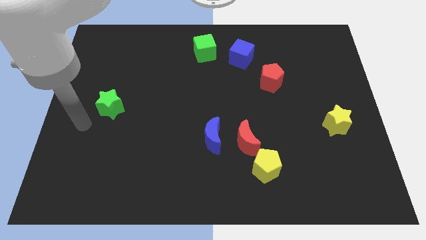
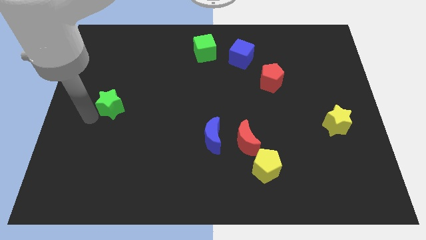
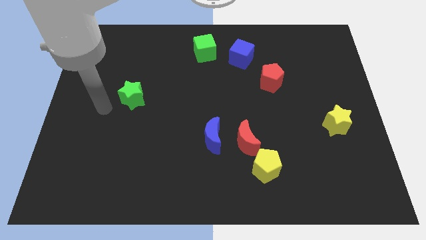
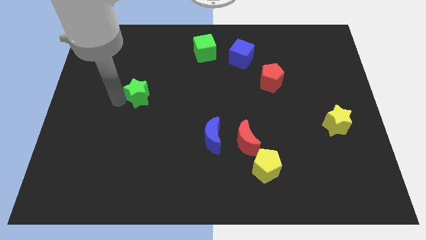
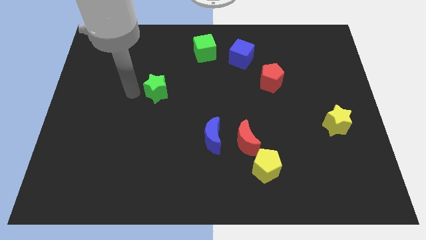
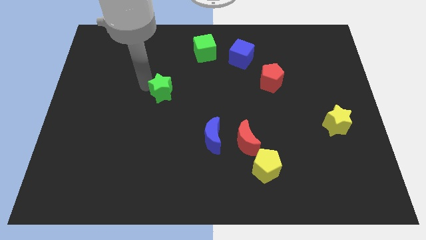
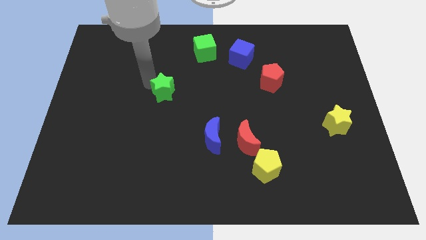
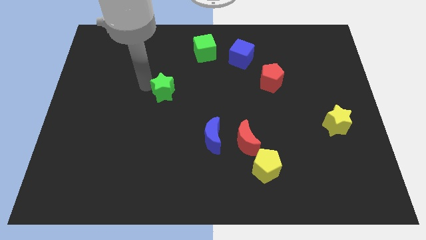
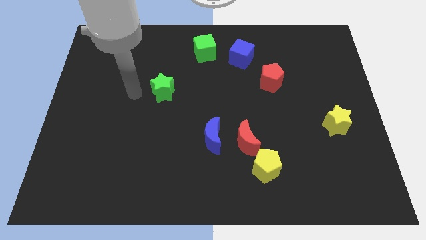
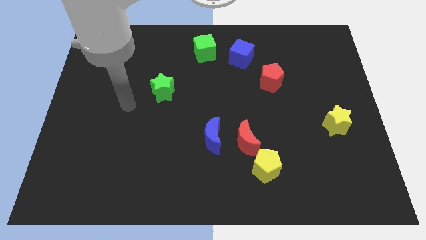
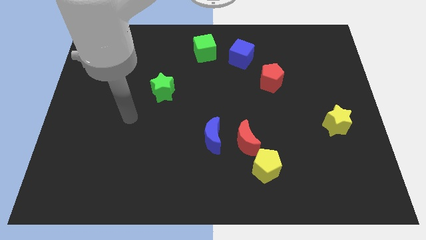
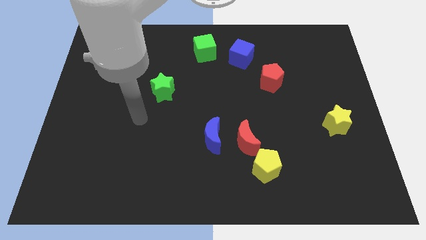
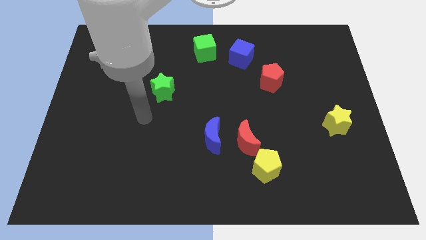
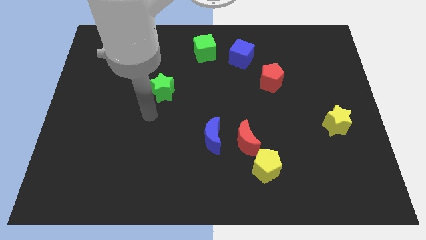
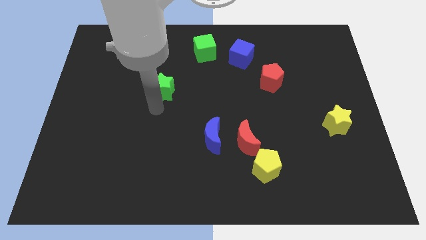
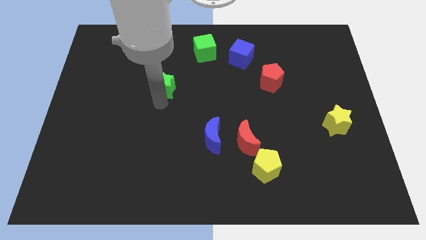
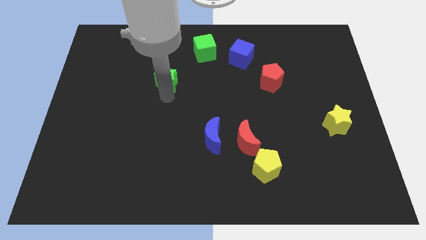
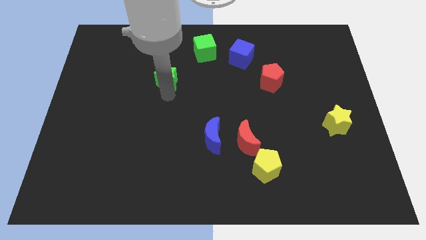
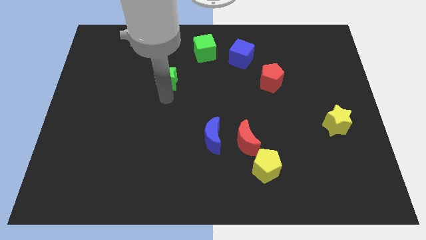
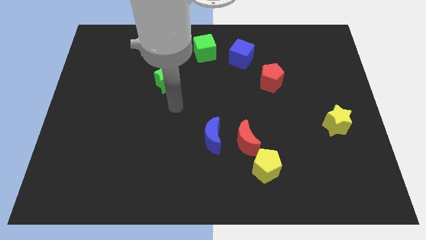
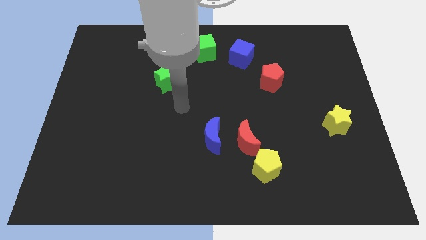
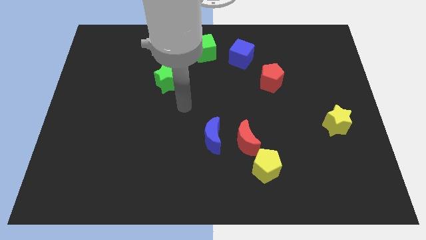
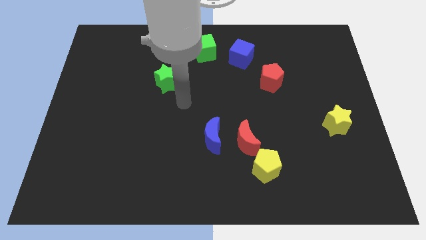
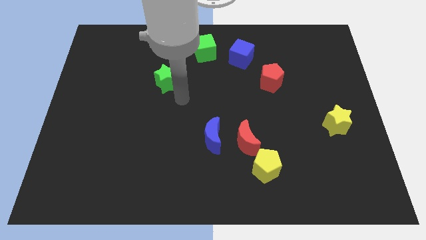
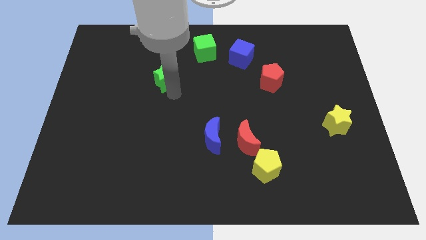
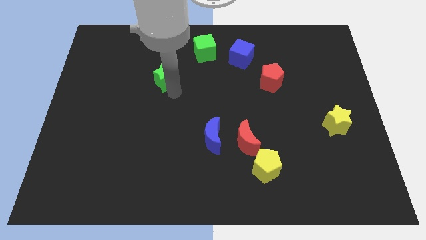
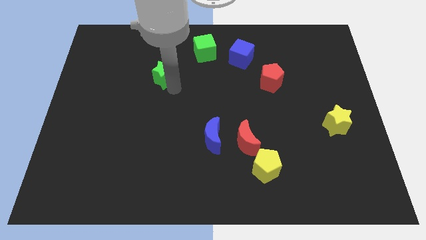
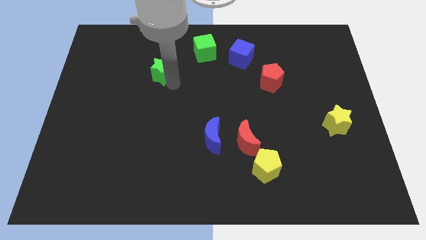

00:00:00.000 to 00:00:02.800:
place the green star on the bottom left of the green cube

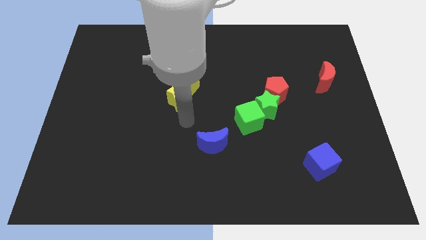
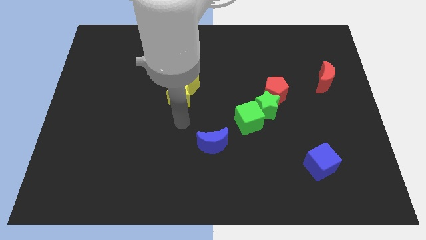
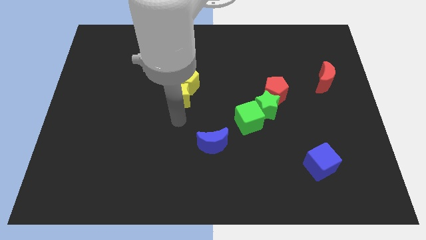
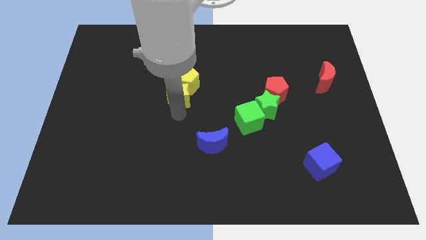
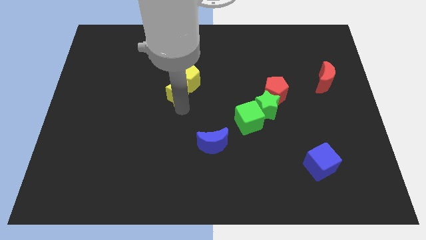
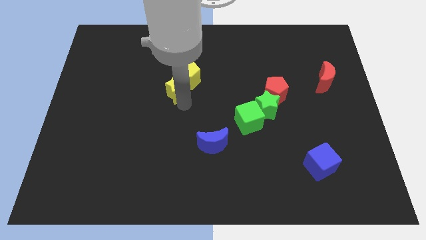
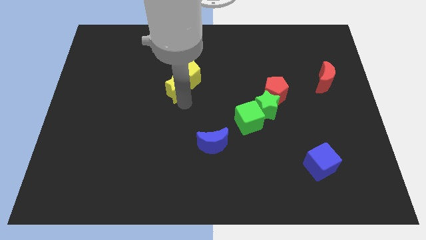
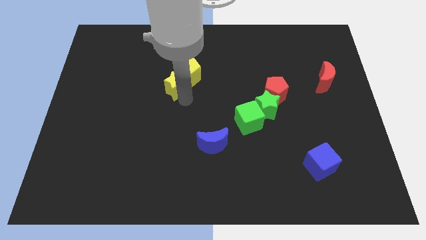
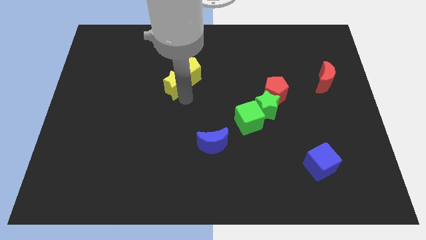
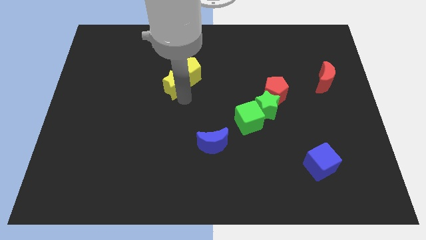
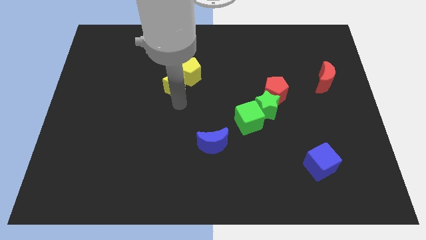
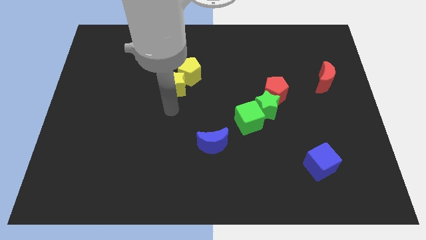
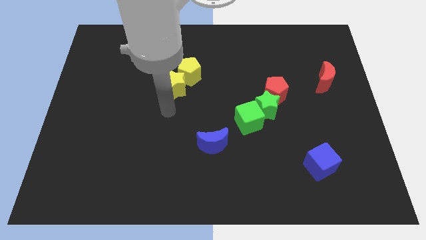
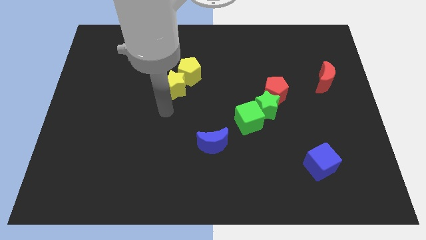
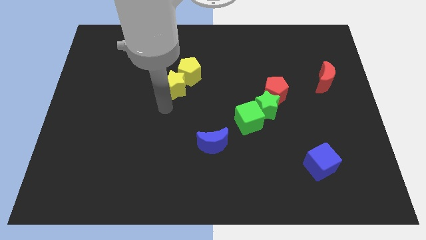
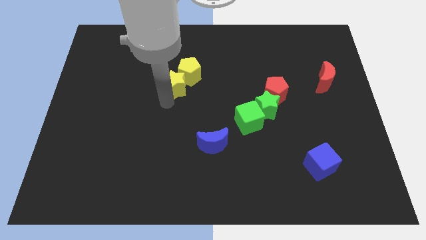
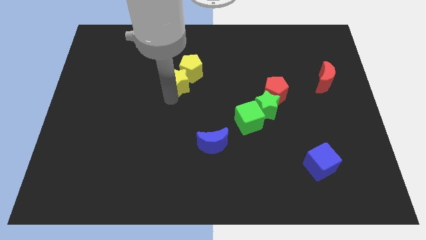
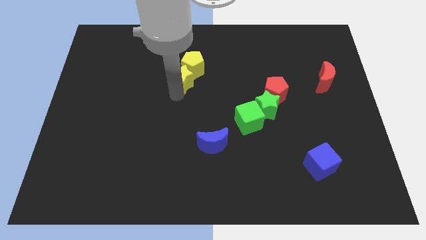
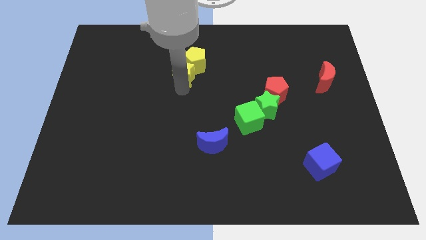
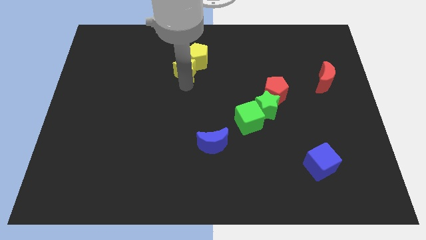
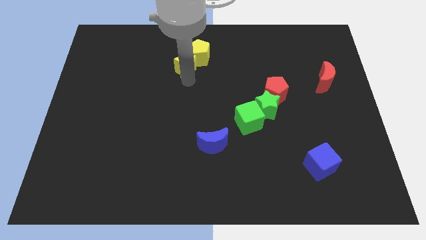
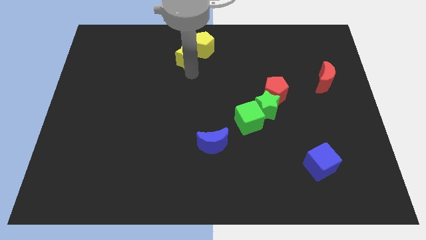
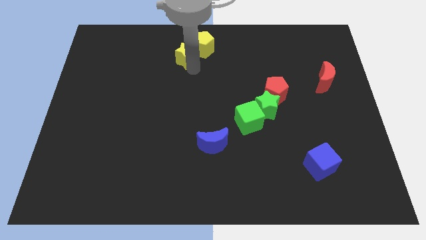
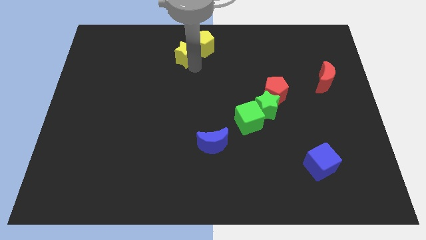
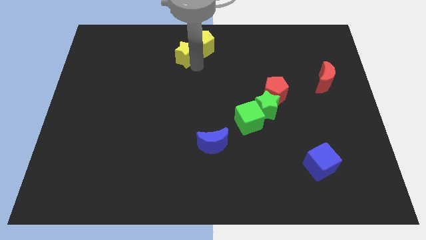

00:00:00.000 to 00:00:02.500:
push yellow star in to yellow pentagon

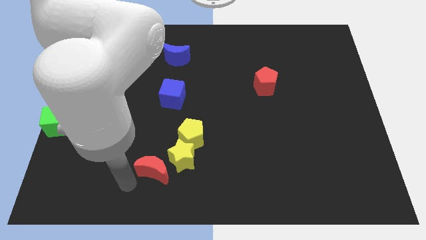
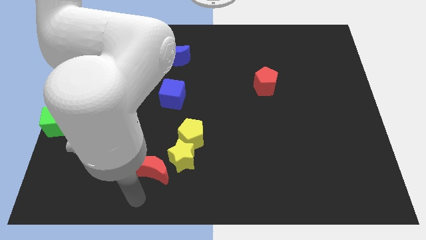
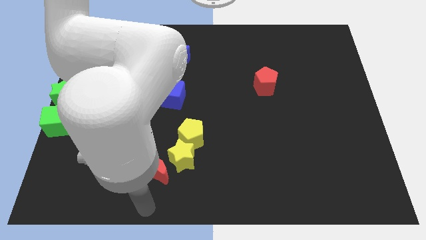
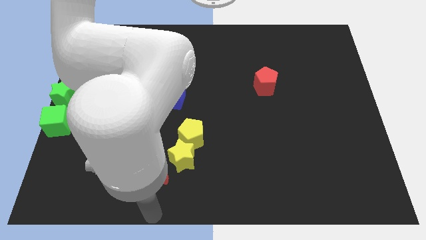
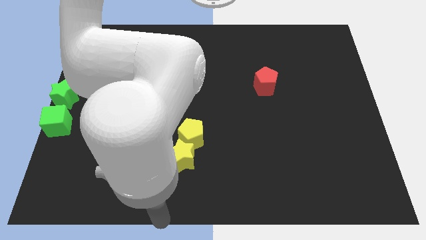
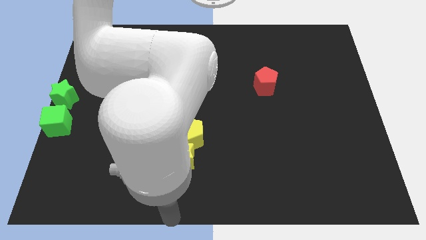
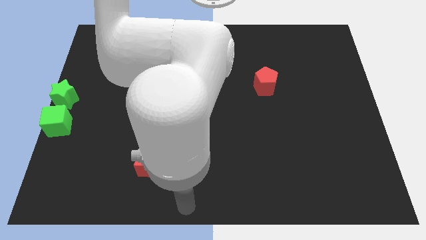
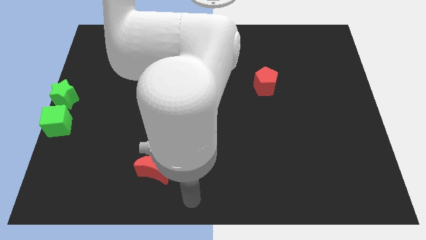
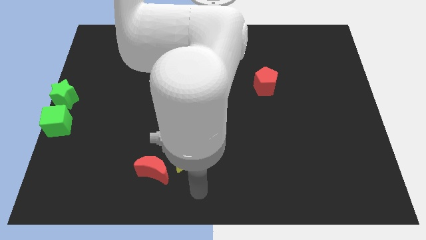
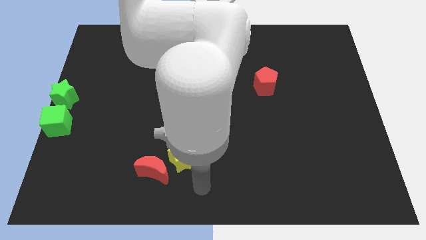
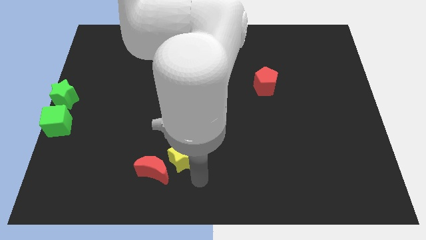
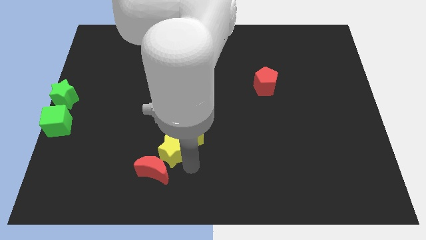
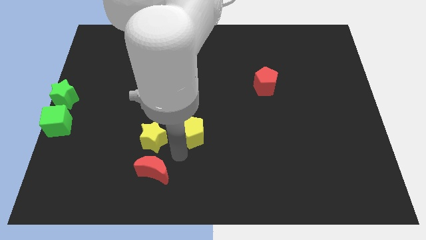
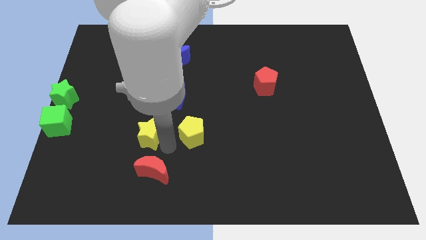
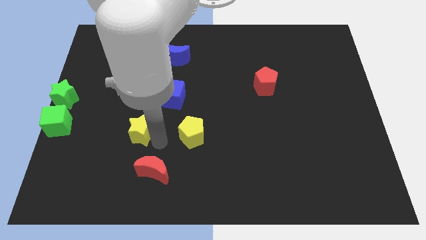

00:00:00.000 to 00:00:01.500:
move the yellow star away from the bottom side of the yellow pentagon

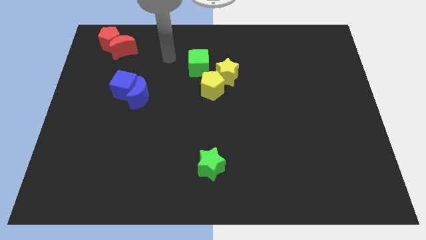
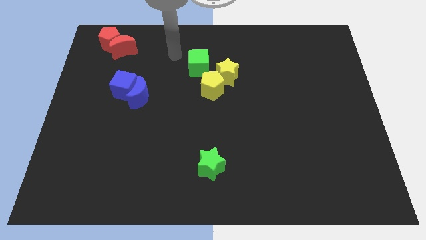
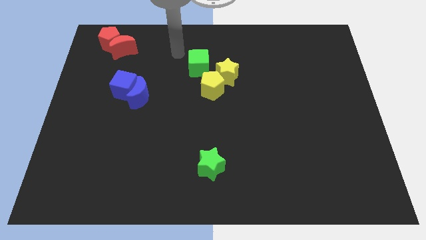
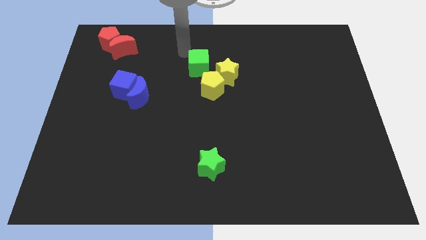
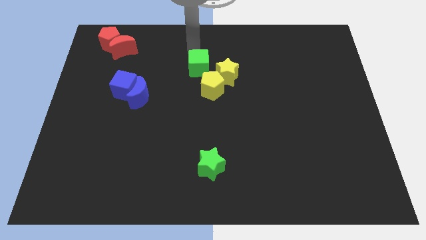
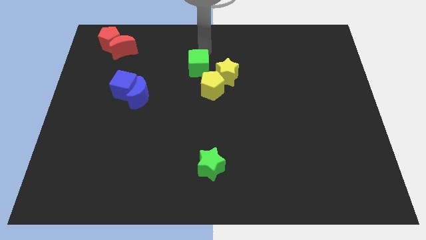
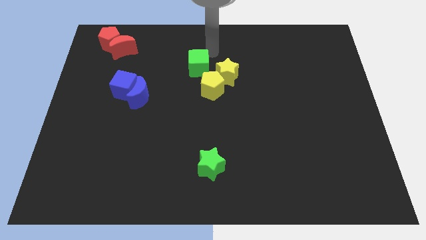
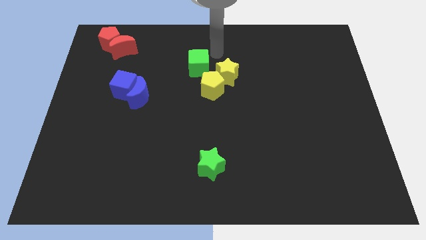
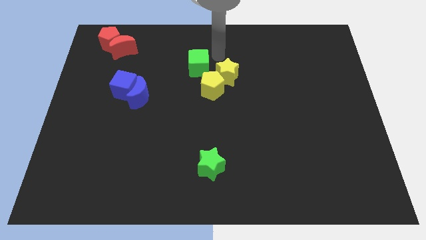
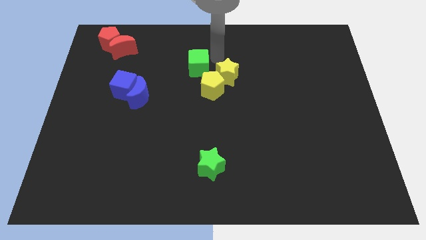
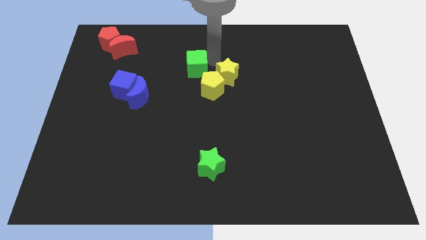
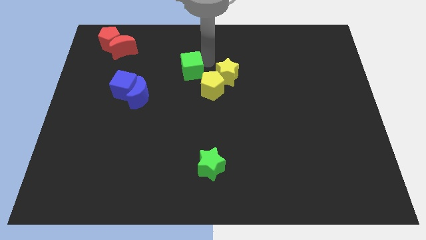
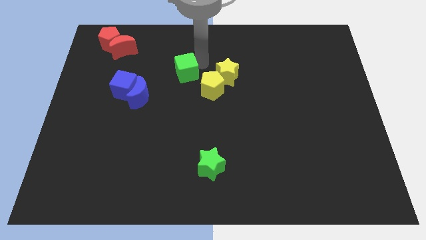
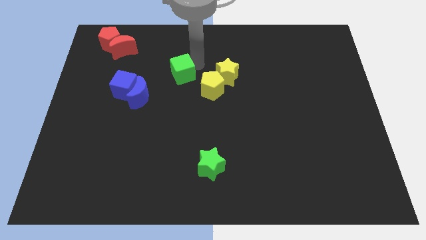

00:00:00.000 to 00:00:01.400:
move the green cube diagonal to the yellow pentagon

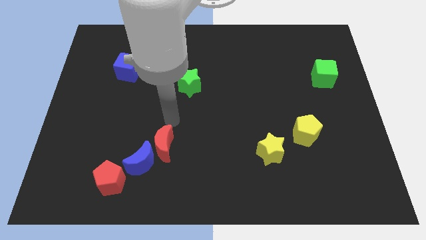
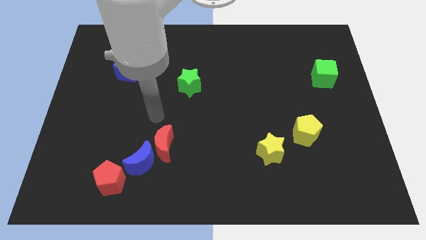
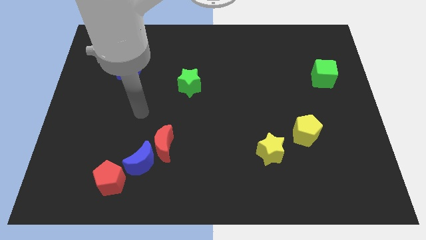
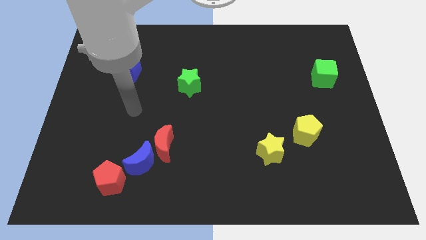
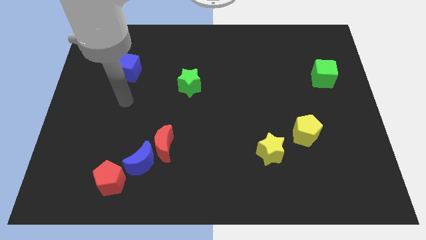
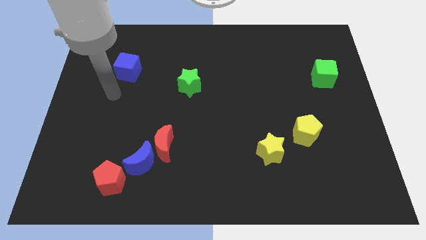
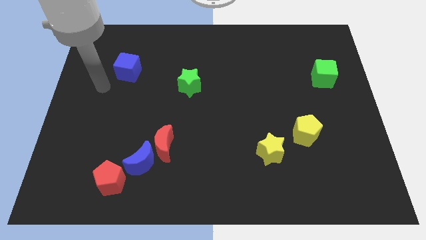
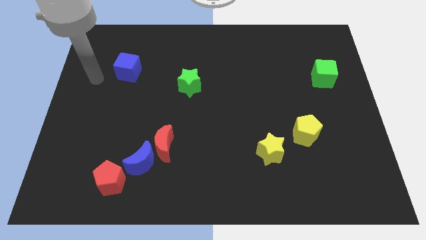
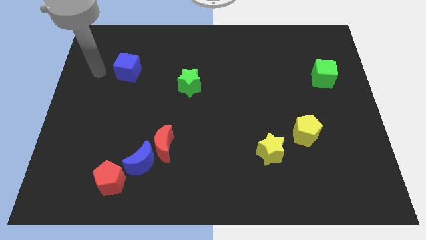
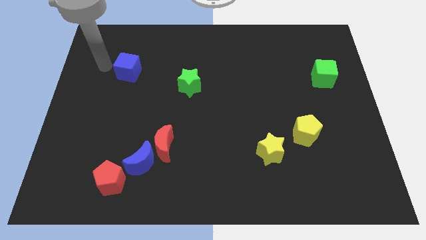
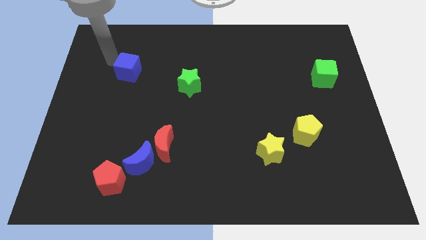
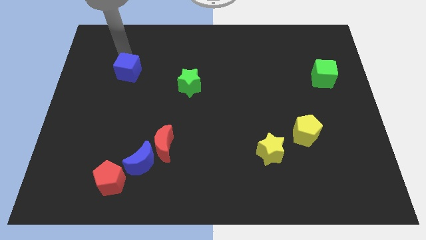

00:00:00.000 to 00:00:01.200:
move away from the red moon
